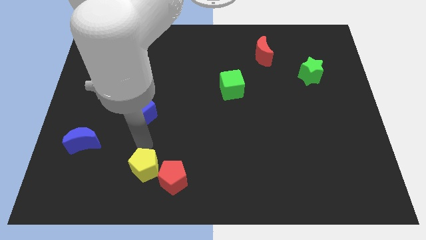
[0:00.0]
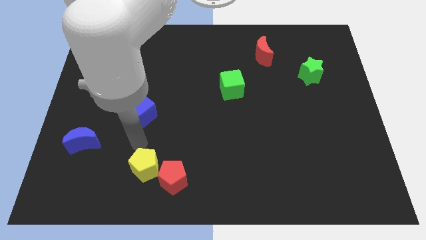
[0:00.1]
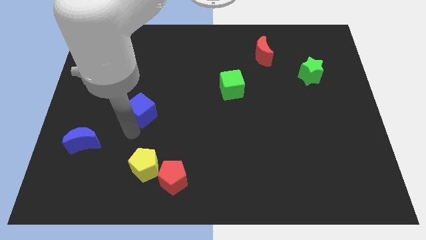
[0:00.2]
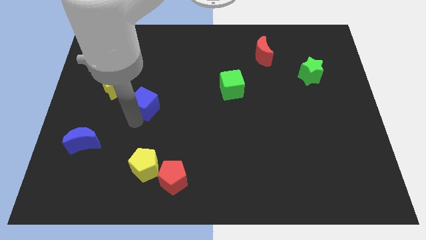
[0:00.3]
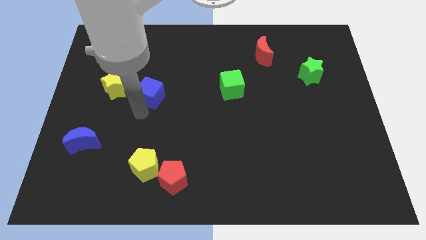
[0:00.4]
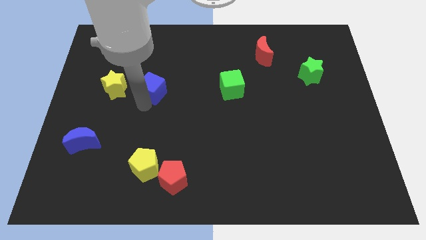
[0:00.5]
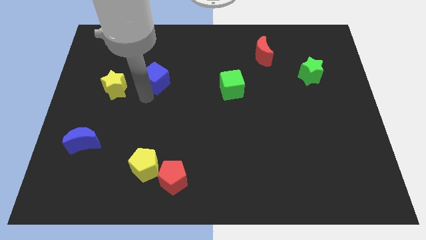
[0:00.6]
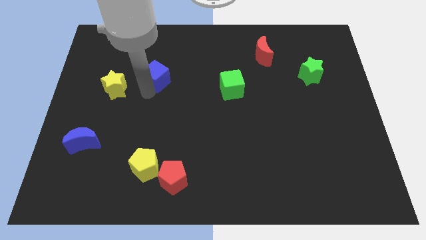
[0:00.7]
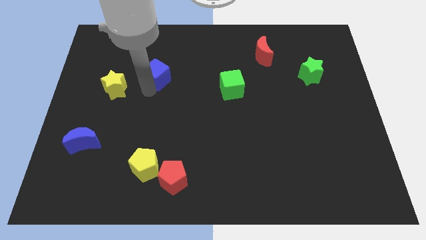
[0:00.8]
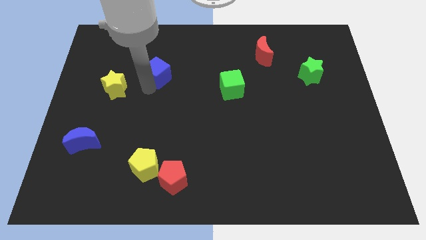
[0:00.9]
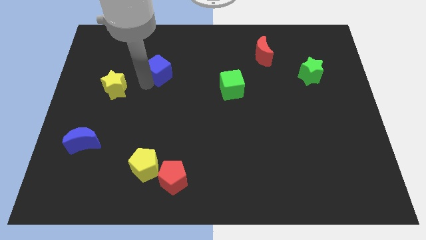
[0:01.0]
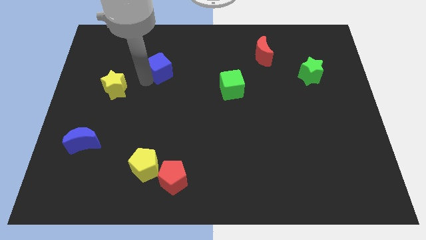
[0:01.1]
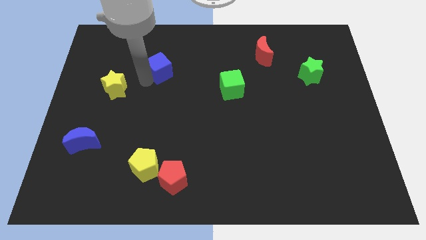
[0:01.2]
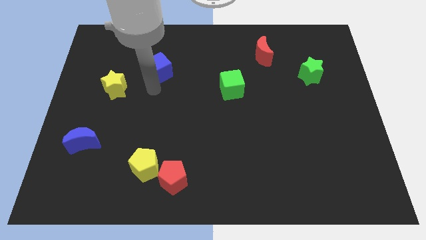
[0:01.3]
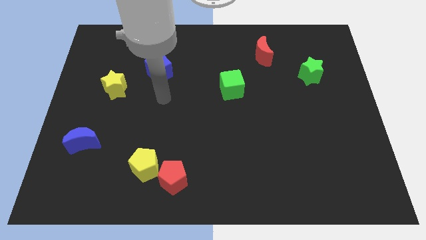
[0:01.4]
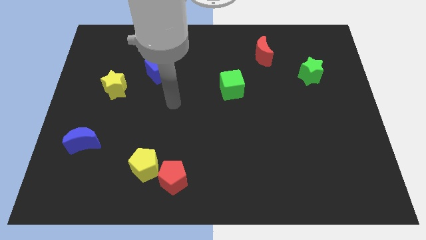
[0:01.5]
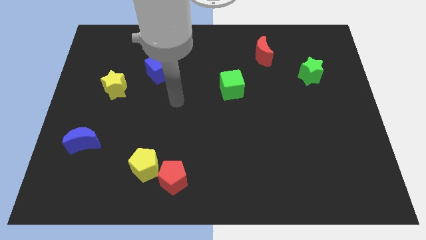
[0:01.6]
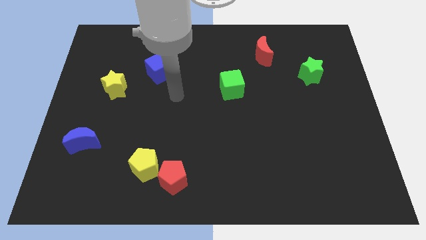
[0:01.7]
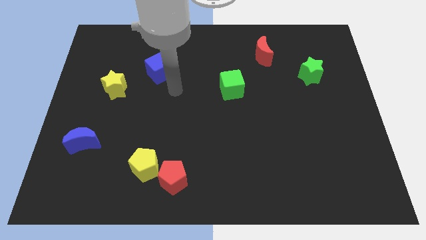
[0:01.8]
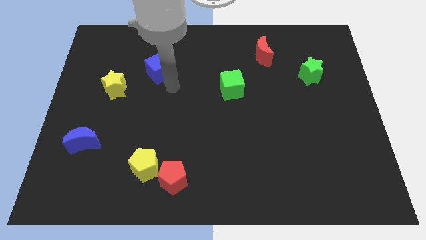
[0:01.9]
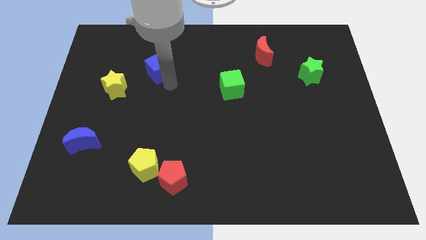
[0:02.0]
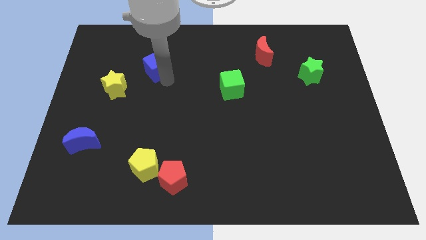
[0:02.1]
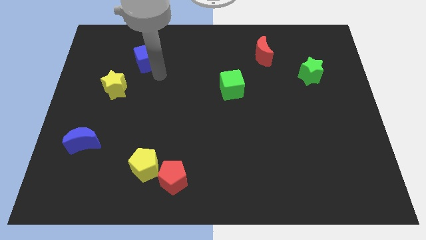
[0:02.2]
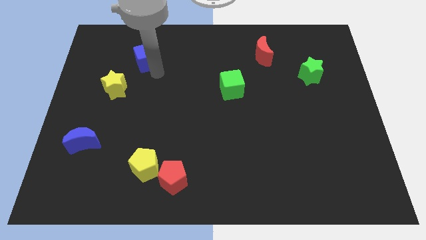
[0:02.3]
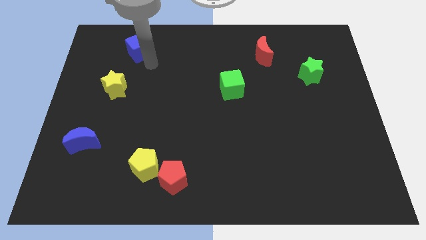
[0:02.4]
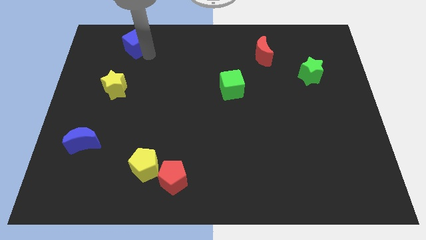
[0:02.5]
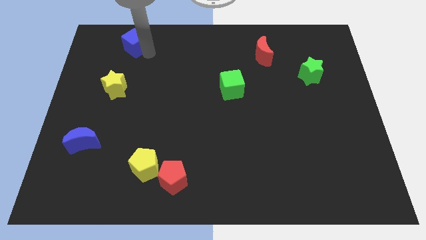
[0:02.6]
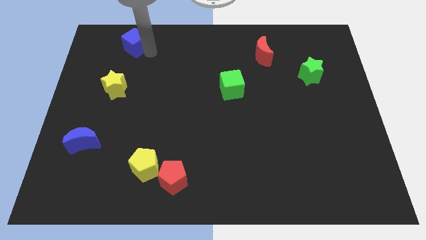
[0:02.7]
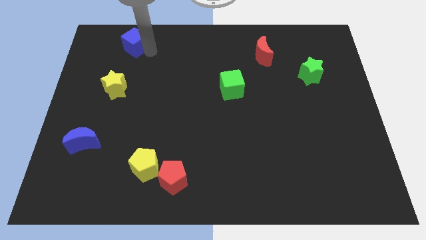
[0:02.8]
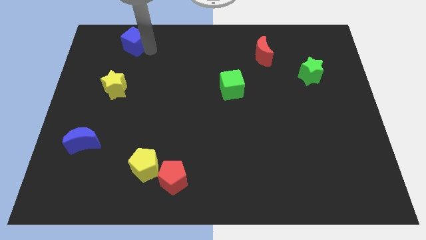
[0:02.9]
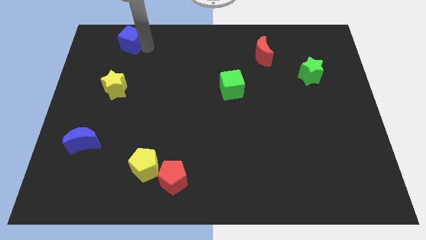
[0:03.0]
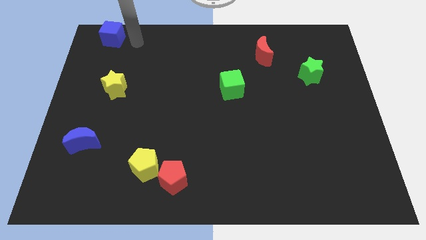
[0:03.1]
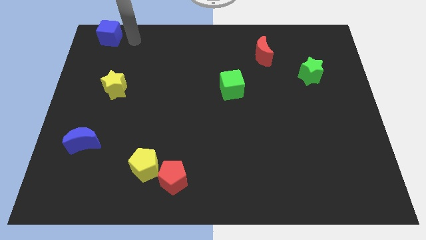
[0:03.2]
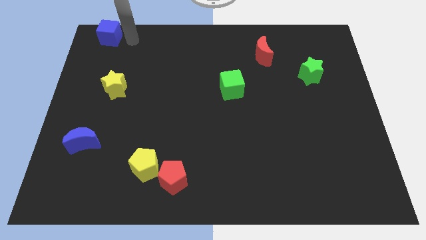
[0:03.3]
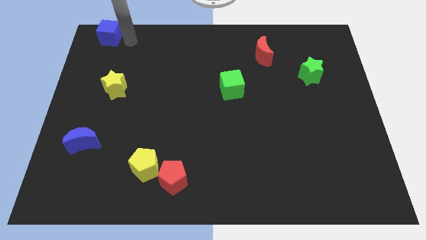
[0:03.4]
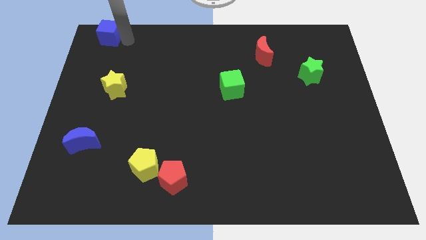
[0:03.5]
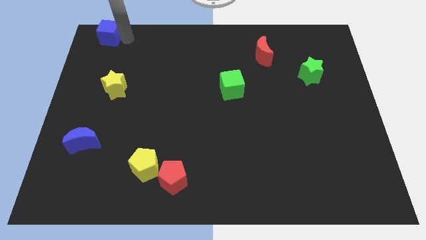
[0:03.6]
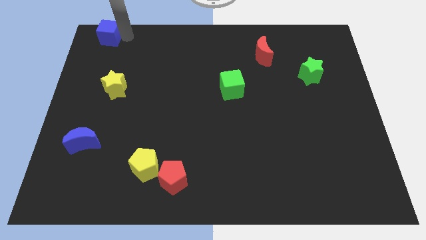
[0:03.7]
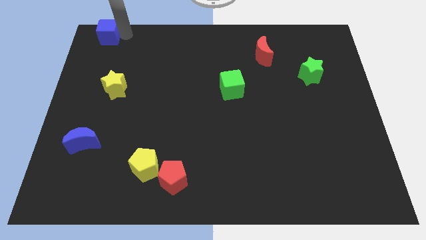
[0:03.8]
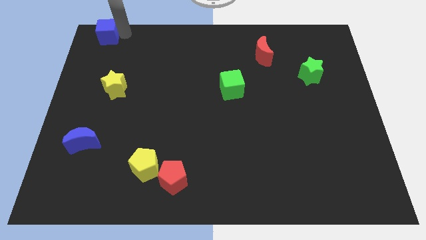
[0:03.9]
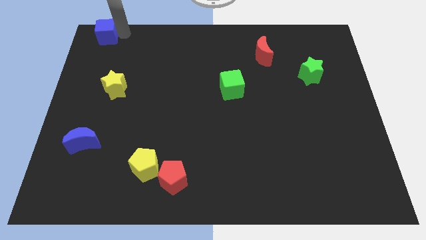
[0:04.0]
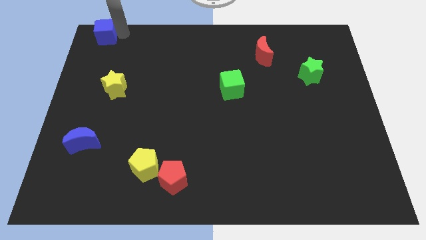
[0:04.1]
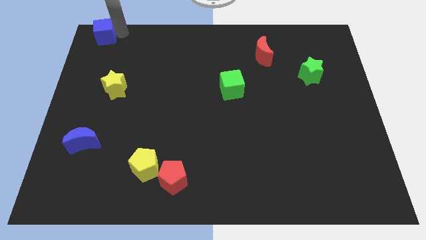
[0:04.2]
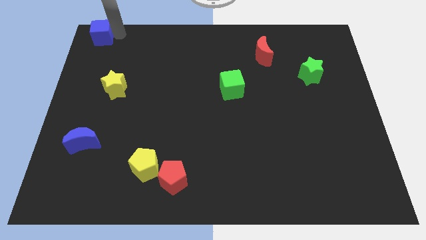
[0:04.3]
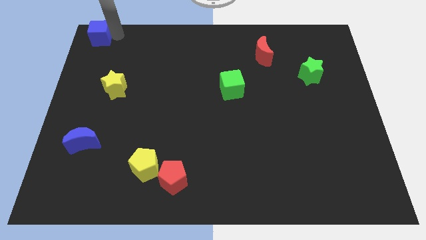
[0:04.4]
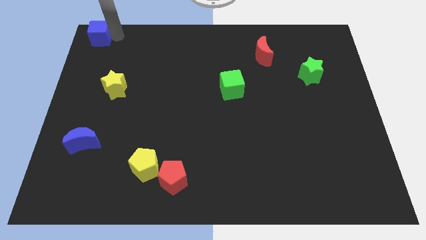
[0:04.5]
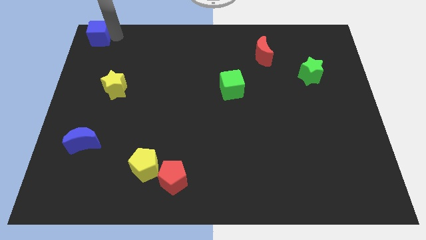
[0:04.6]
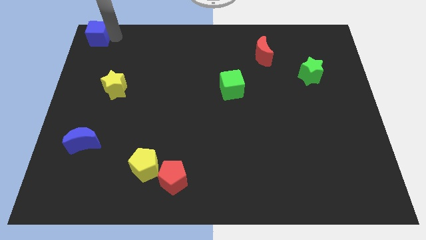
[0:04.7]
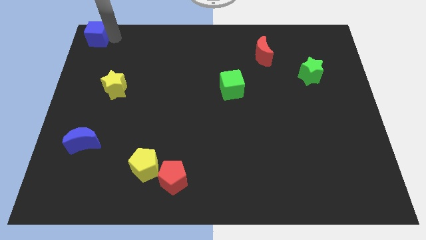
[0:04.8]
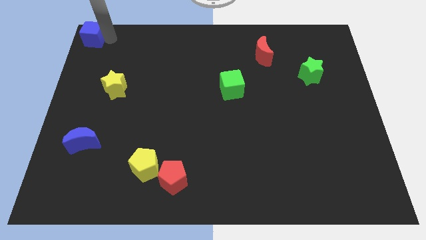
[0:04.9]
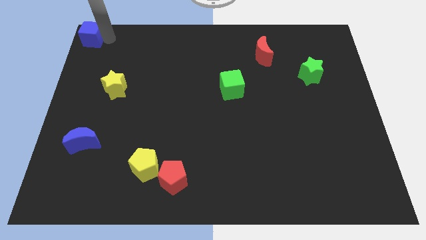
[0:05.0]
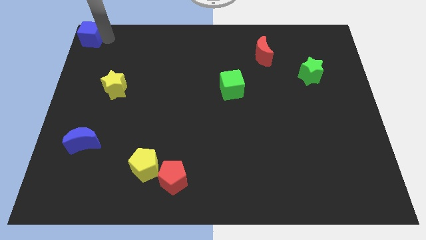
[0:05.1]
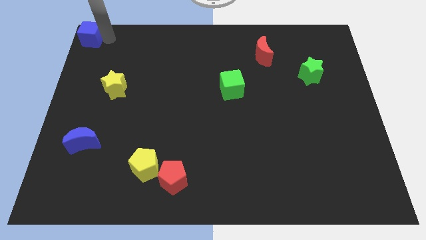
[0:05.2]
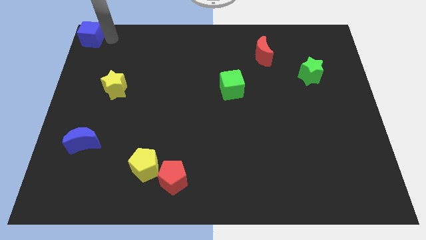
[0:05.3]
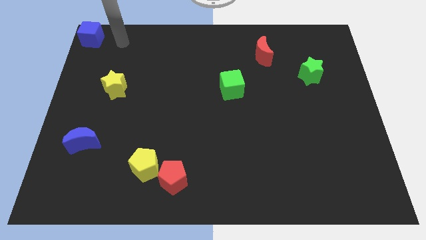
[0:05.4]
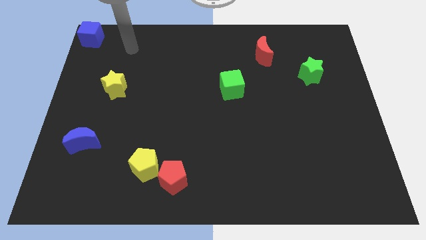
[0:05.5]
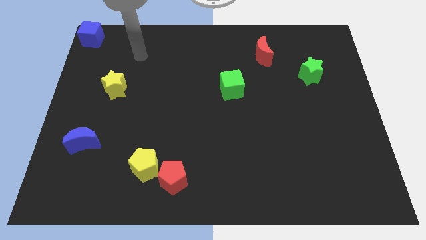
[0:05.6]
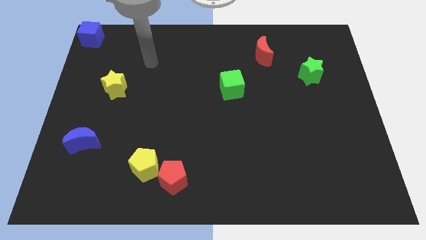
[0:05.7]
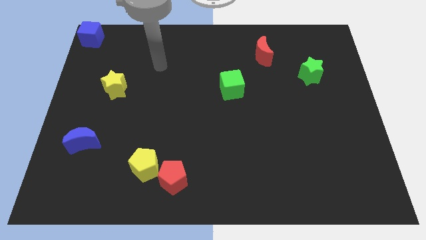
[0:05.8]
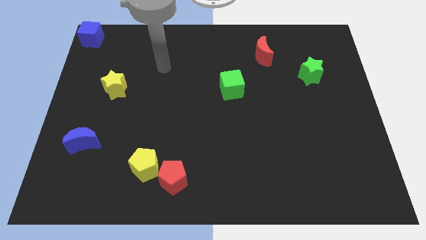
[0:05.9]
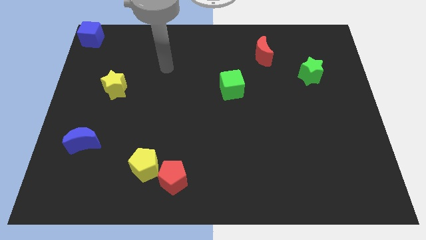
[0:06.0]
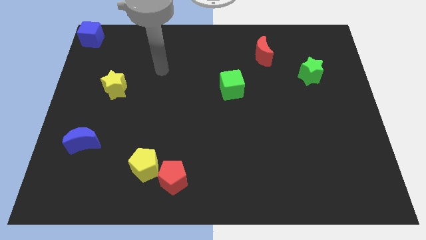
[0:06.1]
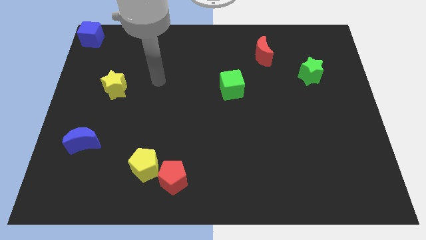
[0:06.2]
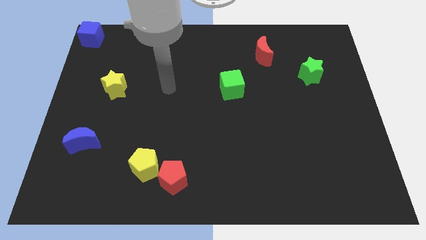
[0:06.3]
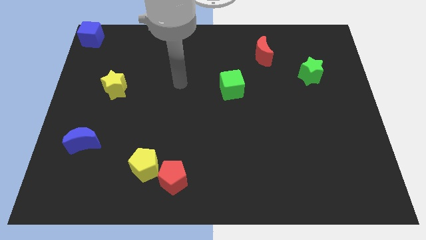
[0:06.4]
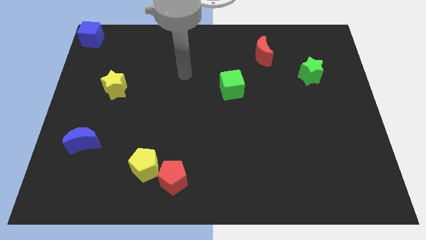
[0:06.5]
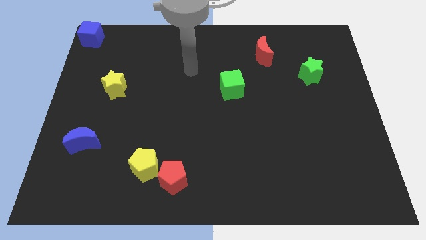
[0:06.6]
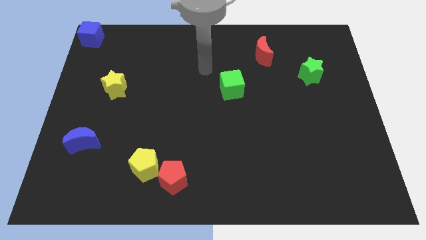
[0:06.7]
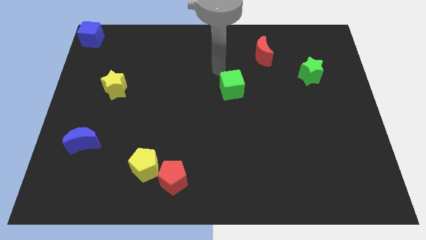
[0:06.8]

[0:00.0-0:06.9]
place the blue cube at the top left corner of the board

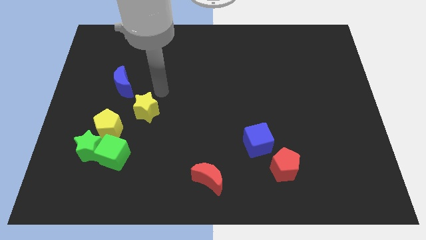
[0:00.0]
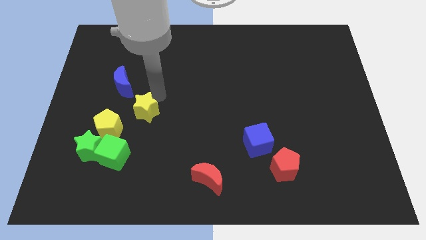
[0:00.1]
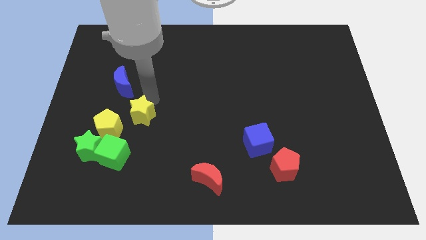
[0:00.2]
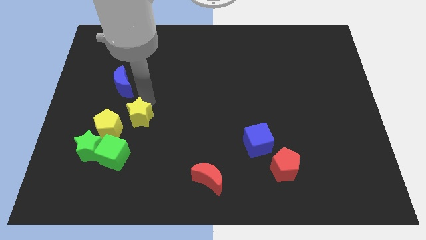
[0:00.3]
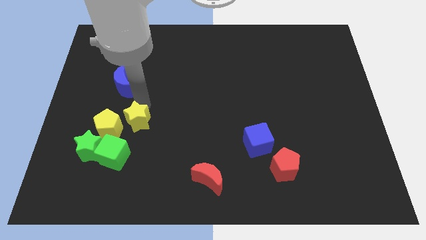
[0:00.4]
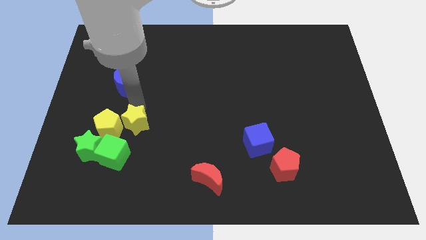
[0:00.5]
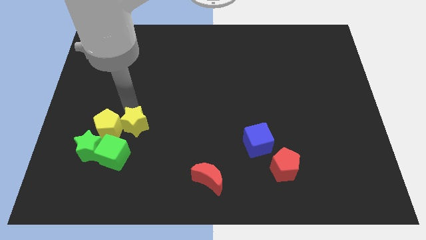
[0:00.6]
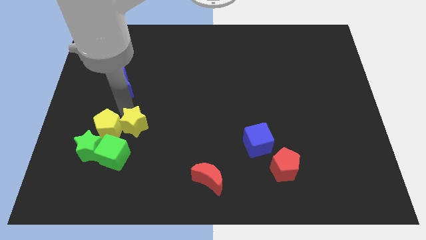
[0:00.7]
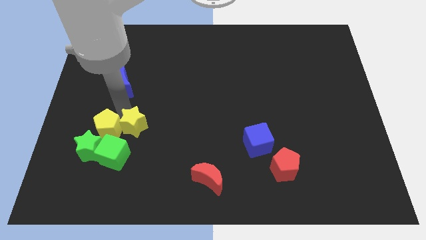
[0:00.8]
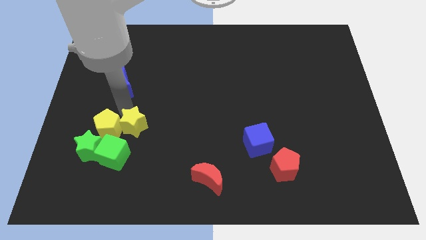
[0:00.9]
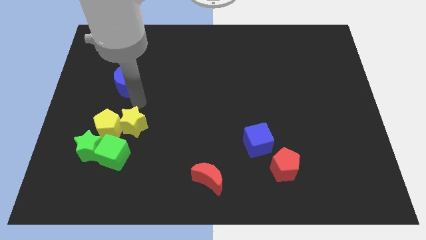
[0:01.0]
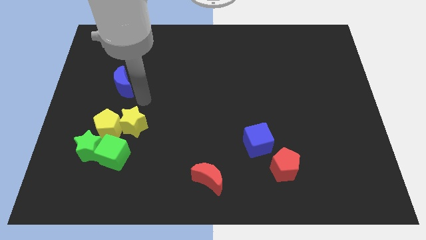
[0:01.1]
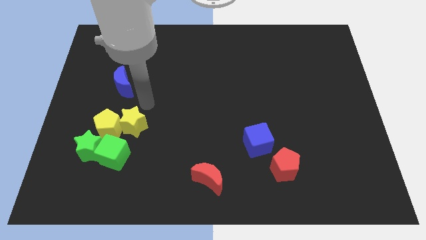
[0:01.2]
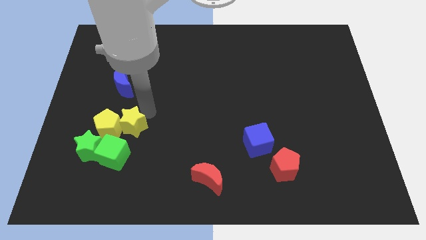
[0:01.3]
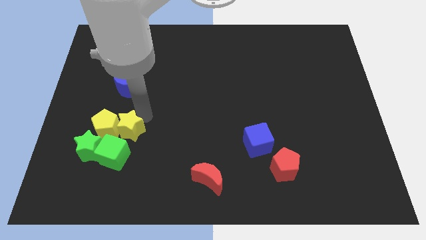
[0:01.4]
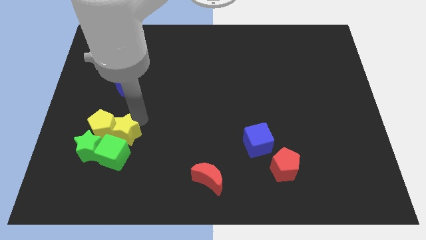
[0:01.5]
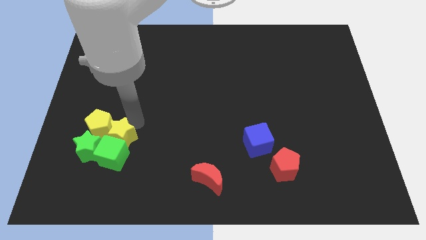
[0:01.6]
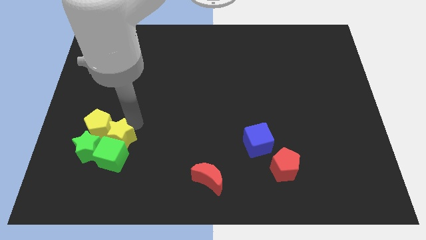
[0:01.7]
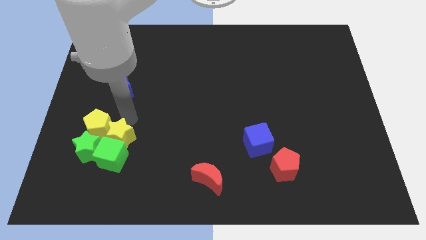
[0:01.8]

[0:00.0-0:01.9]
put the yellow star above the green cube

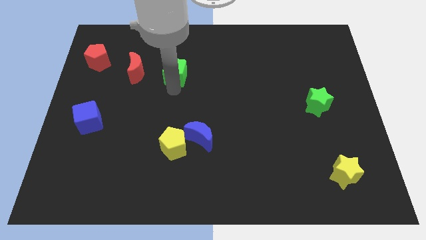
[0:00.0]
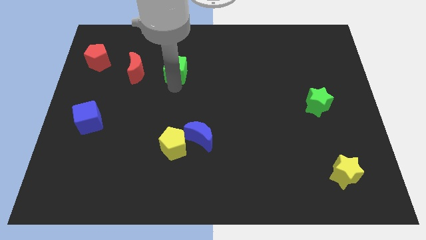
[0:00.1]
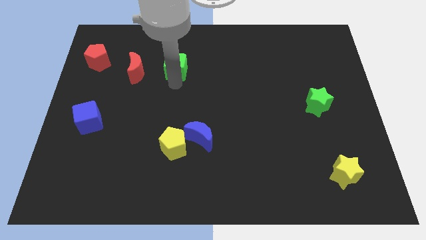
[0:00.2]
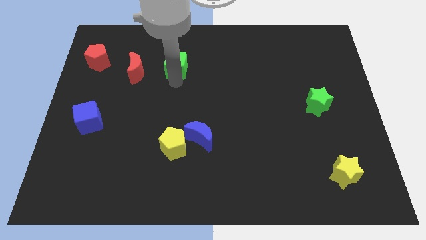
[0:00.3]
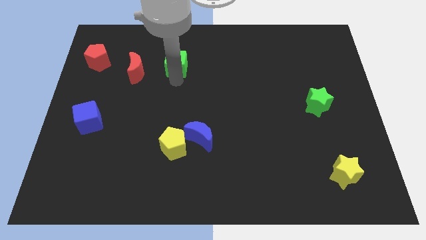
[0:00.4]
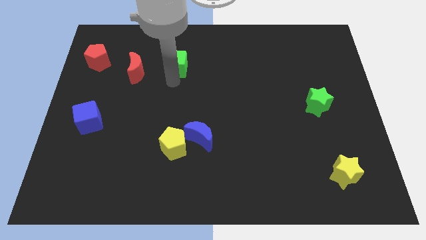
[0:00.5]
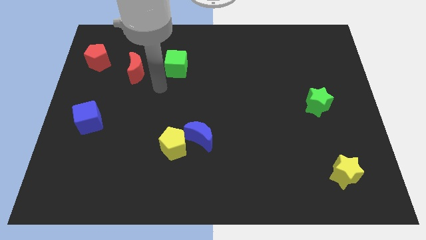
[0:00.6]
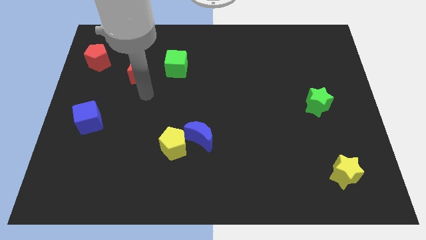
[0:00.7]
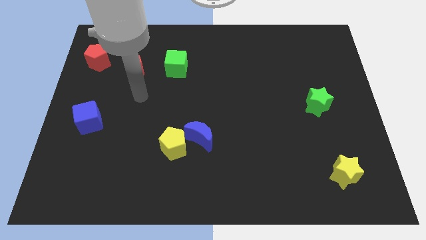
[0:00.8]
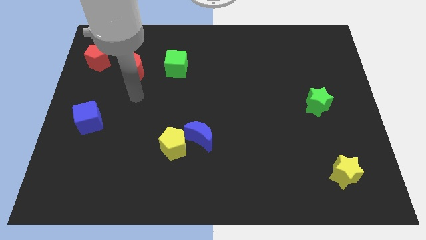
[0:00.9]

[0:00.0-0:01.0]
push the green cube towards the top center of the board
